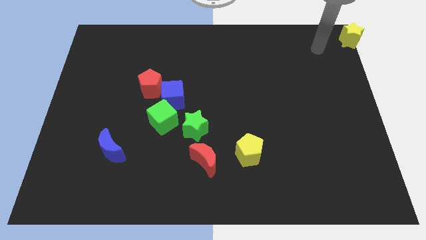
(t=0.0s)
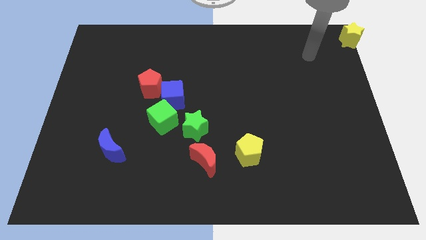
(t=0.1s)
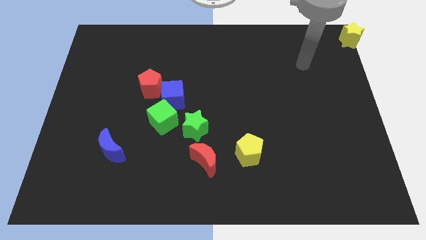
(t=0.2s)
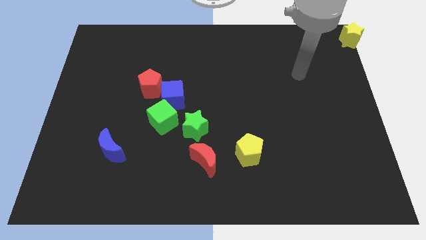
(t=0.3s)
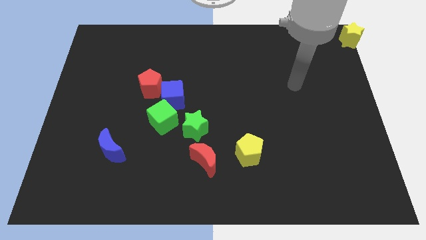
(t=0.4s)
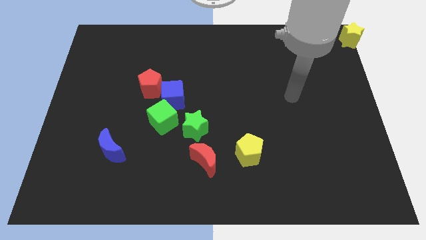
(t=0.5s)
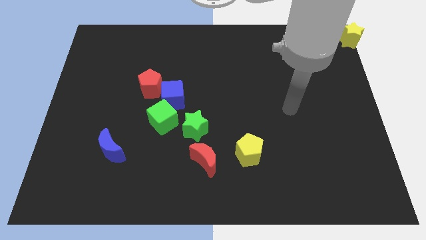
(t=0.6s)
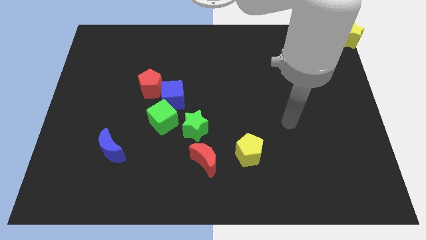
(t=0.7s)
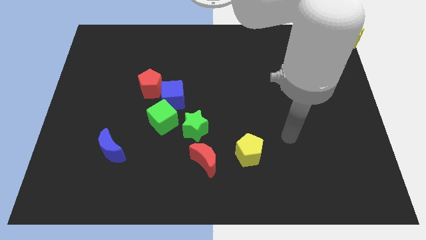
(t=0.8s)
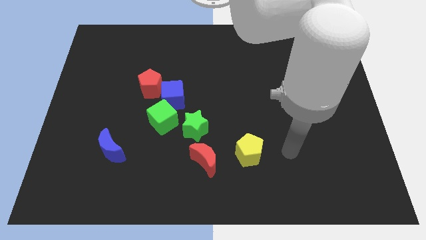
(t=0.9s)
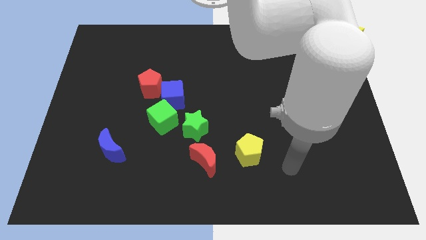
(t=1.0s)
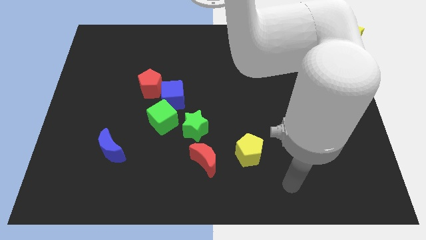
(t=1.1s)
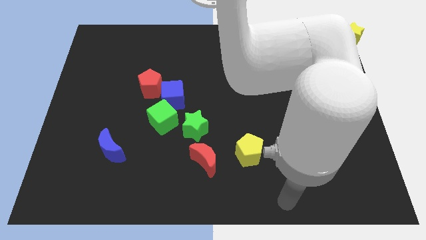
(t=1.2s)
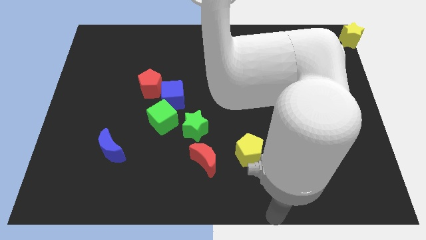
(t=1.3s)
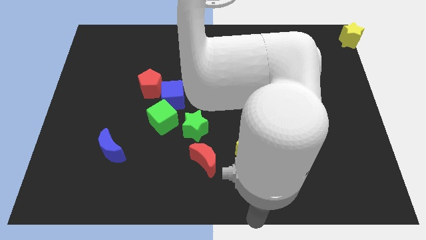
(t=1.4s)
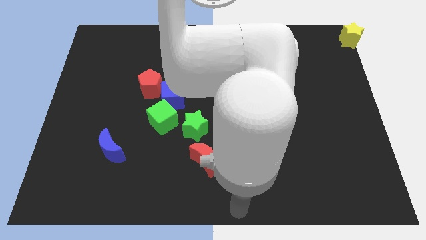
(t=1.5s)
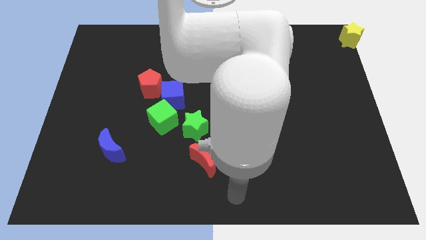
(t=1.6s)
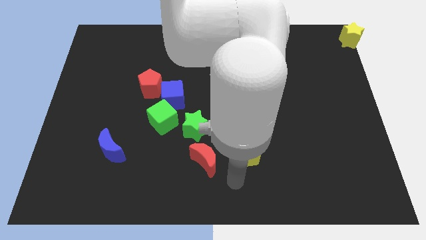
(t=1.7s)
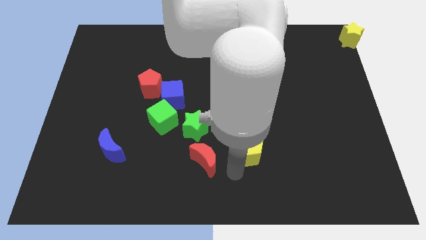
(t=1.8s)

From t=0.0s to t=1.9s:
point your arm at the bottom of the yellow pentagon

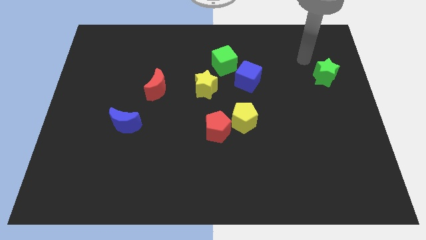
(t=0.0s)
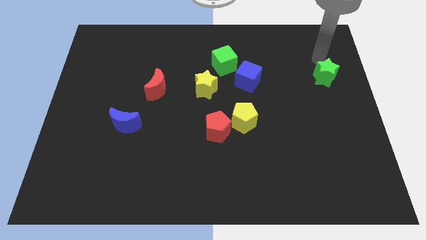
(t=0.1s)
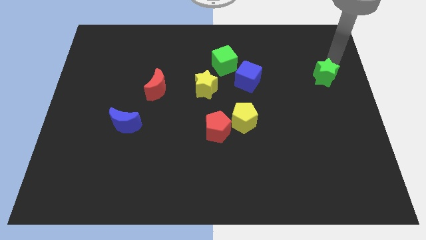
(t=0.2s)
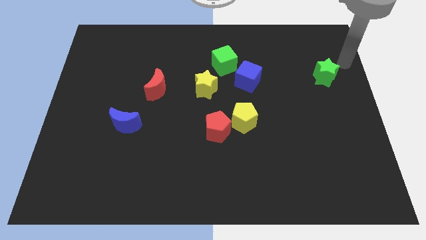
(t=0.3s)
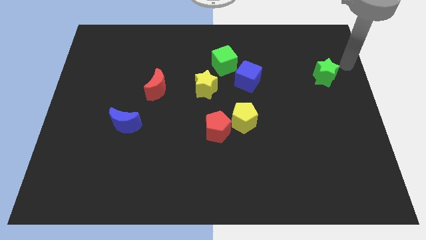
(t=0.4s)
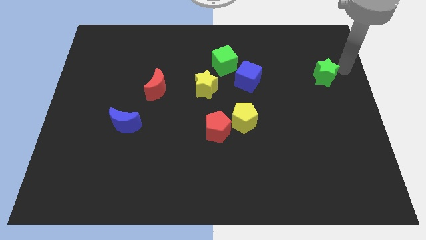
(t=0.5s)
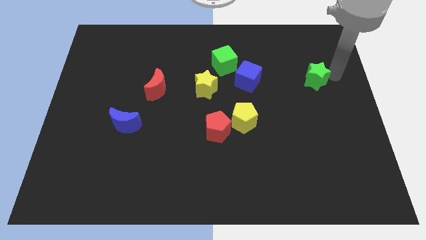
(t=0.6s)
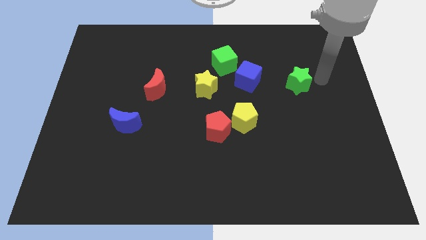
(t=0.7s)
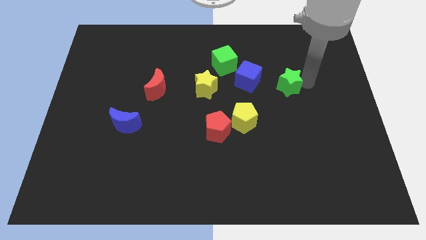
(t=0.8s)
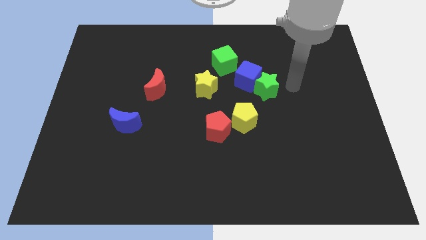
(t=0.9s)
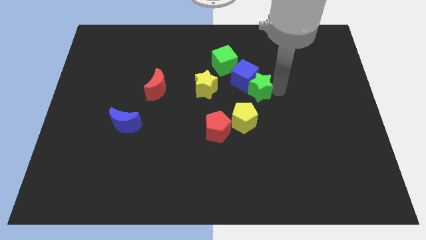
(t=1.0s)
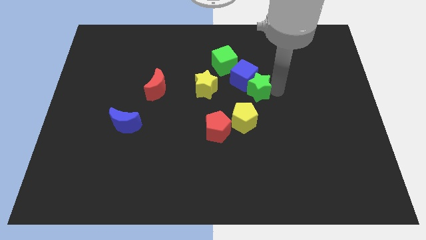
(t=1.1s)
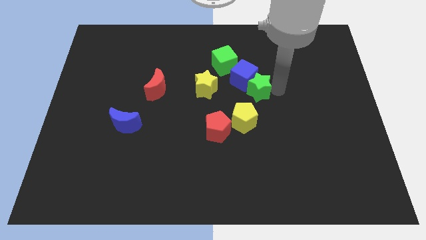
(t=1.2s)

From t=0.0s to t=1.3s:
push the green star into the blue cube

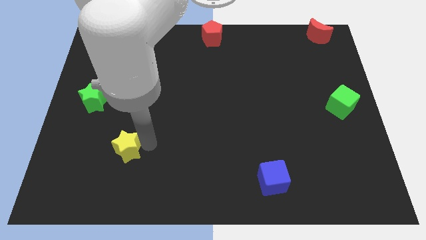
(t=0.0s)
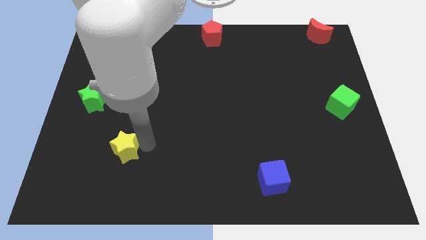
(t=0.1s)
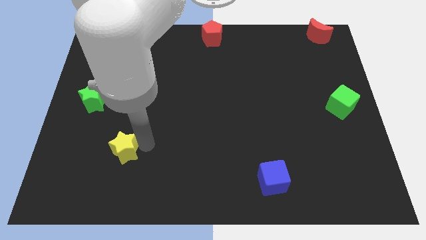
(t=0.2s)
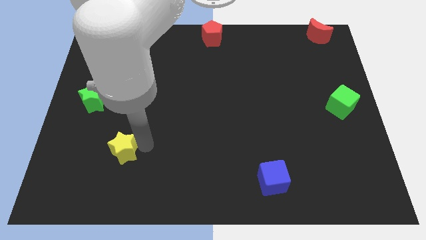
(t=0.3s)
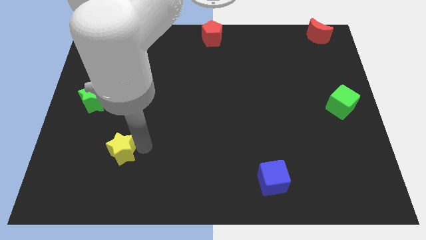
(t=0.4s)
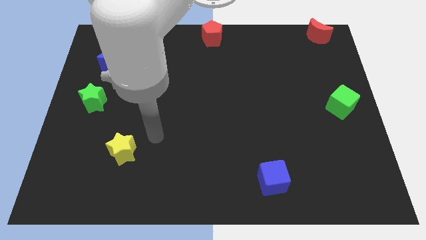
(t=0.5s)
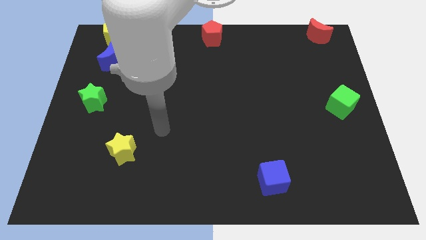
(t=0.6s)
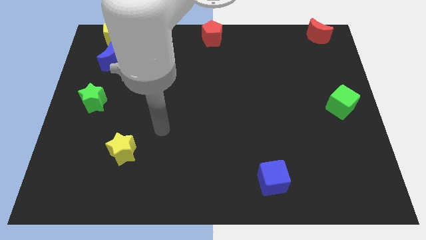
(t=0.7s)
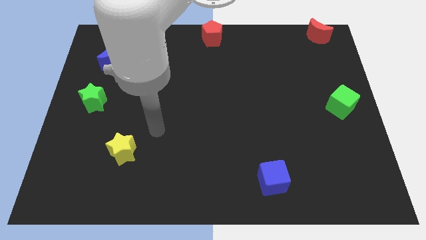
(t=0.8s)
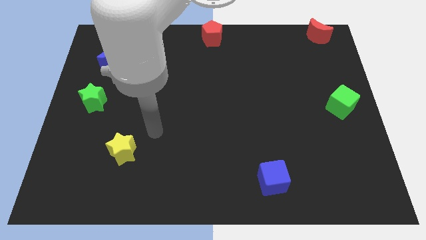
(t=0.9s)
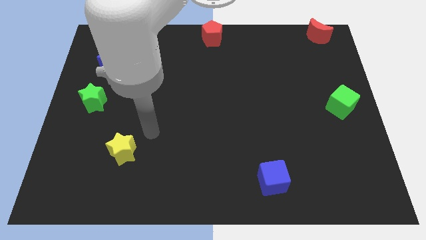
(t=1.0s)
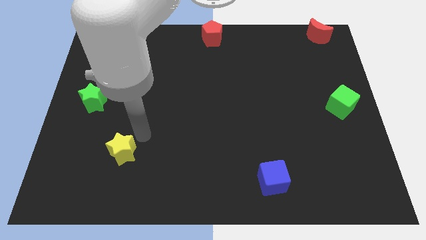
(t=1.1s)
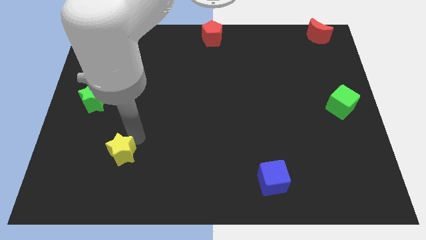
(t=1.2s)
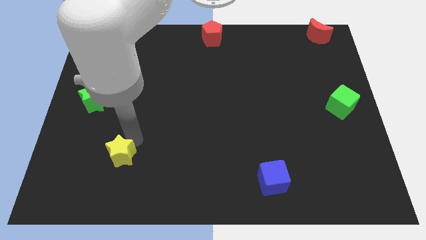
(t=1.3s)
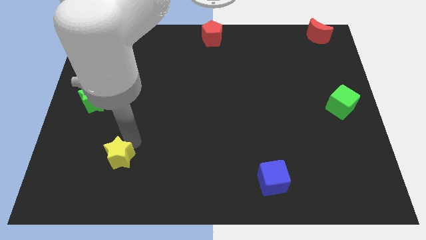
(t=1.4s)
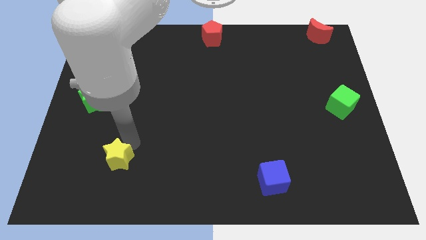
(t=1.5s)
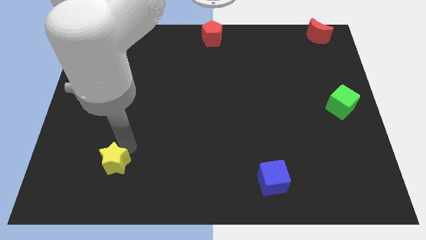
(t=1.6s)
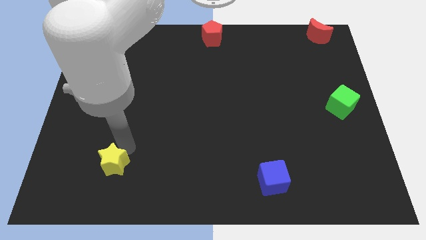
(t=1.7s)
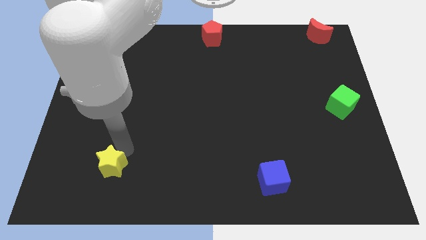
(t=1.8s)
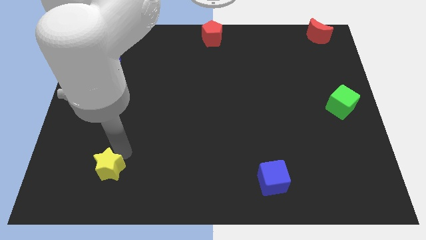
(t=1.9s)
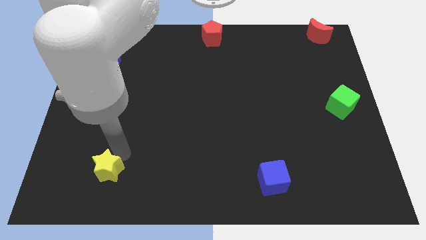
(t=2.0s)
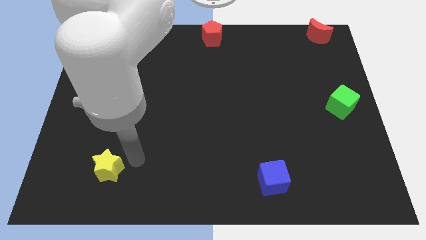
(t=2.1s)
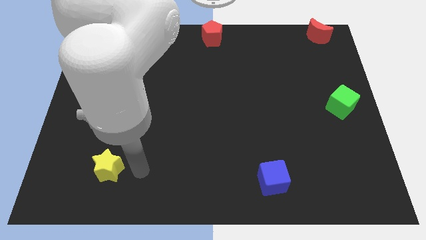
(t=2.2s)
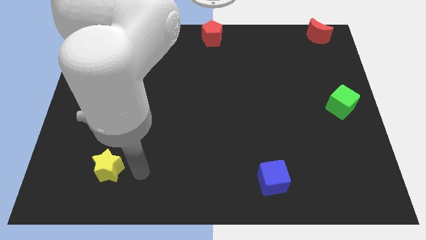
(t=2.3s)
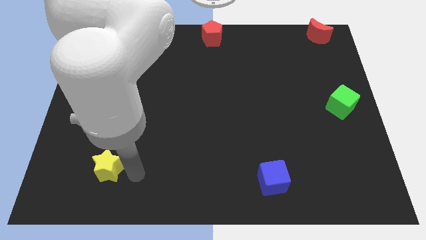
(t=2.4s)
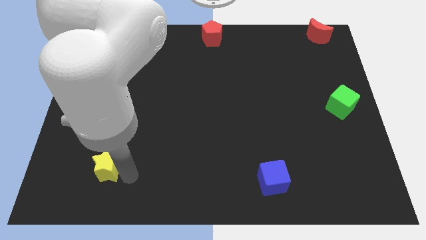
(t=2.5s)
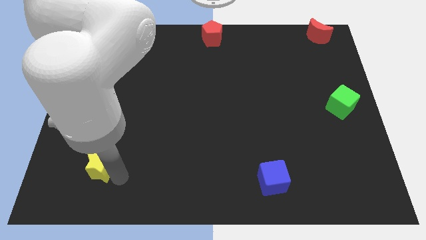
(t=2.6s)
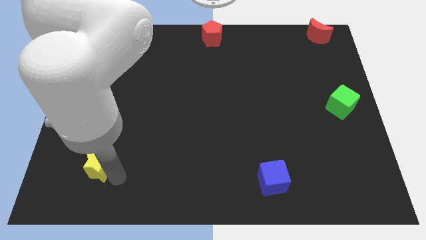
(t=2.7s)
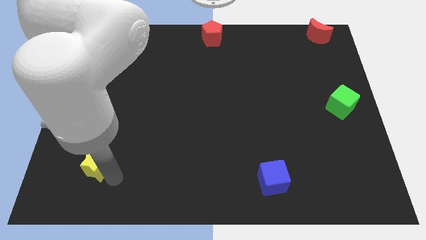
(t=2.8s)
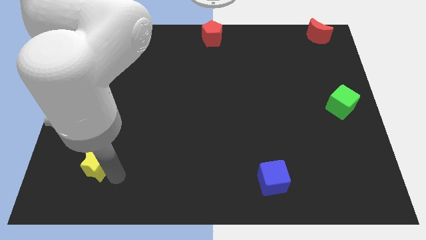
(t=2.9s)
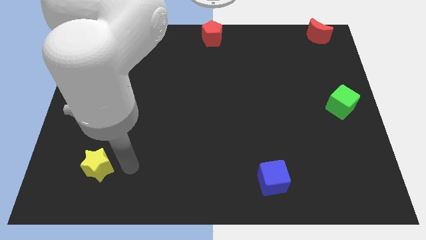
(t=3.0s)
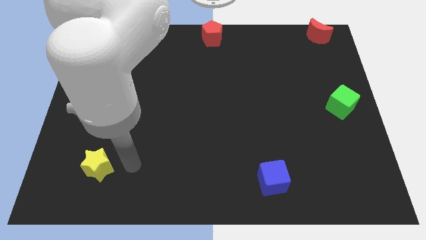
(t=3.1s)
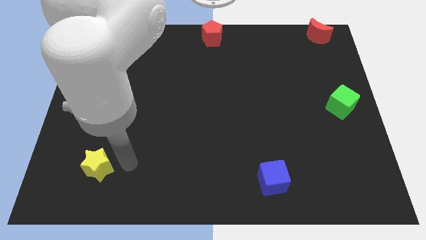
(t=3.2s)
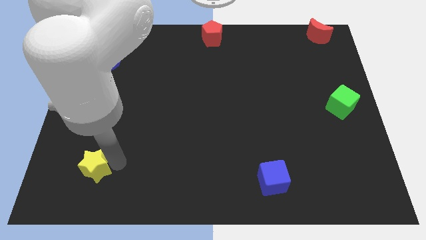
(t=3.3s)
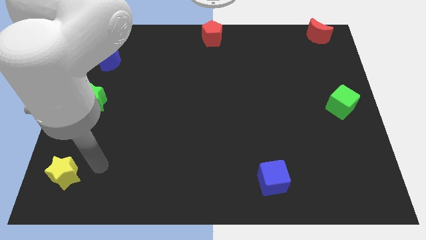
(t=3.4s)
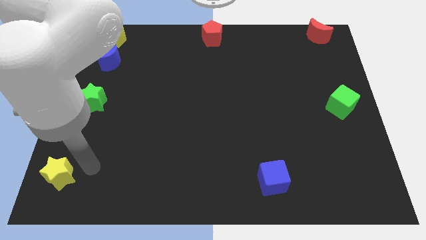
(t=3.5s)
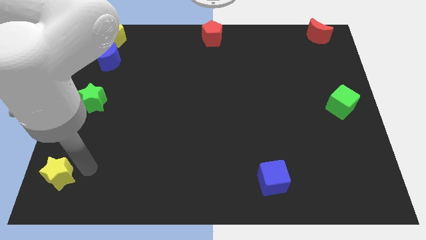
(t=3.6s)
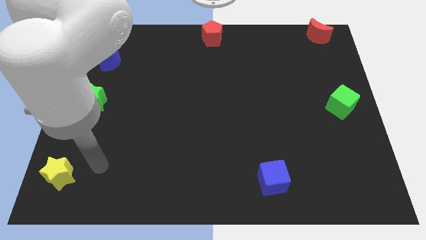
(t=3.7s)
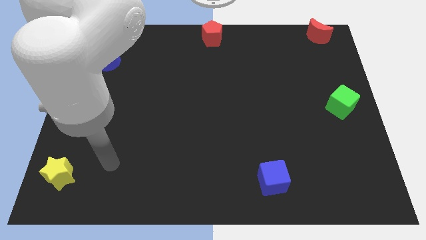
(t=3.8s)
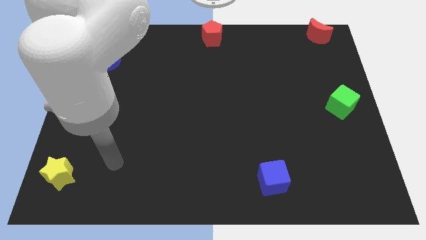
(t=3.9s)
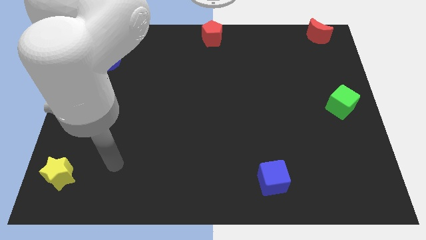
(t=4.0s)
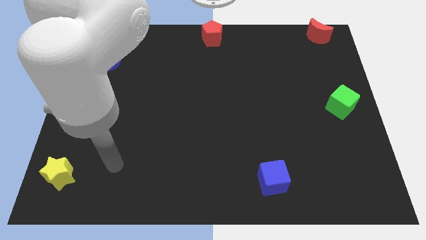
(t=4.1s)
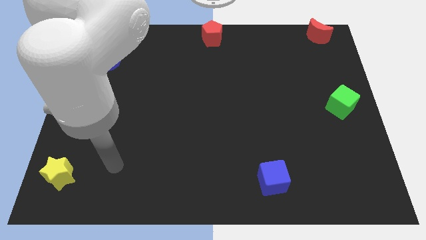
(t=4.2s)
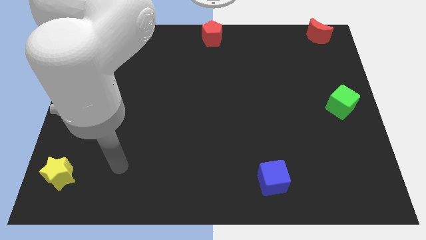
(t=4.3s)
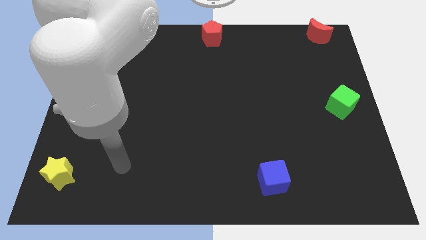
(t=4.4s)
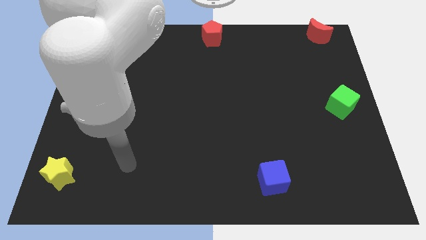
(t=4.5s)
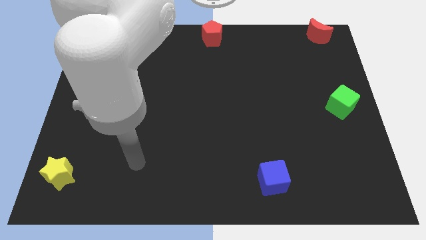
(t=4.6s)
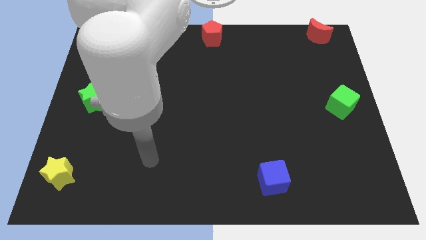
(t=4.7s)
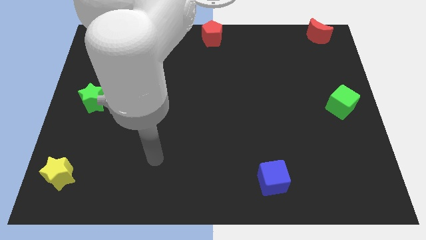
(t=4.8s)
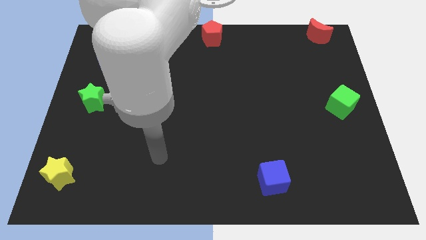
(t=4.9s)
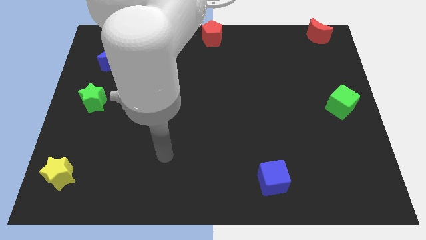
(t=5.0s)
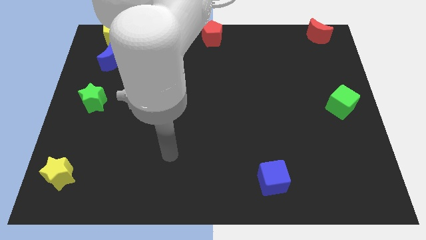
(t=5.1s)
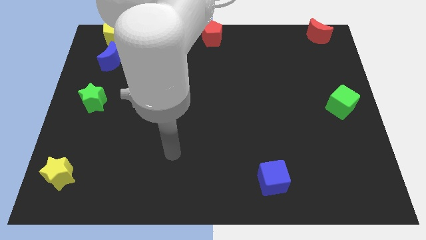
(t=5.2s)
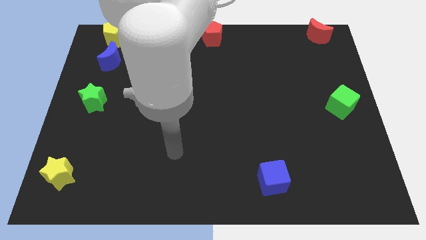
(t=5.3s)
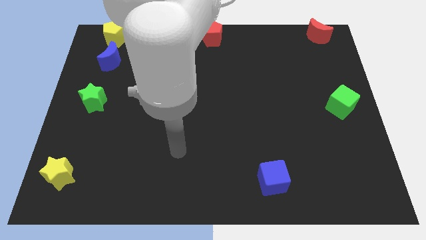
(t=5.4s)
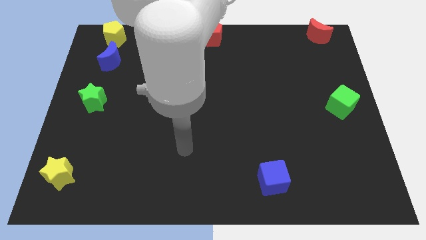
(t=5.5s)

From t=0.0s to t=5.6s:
move the yellow star to the left bottom
